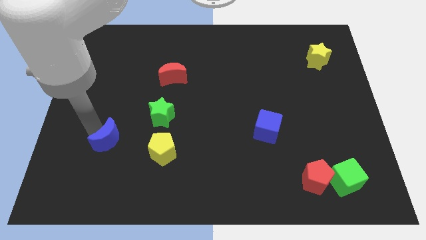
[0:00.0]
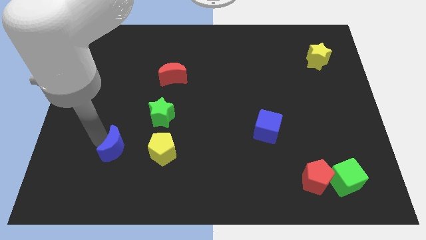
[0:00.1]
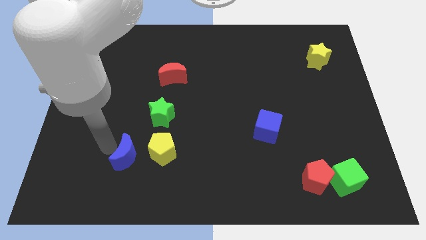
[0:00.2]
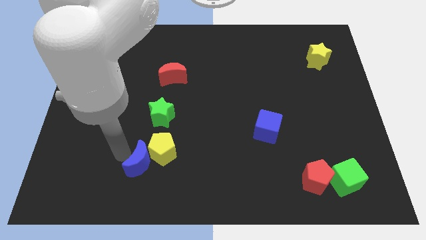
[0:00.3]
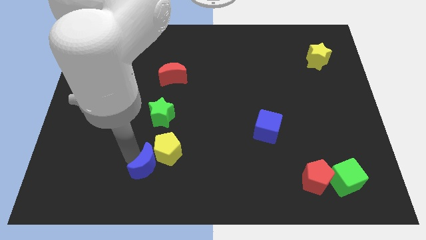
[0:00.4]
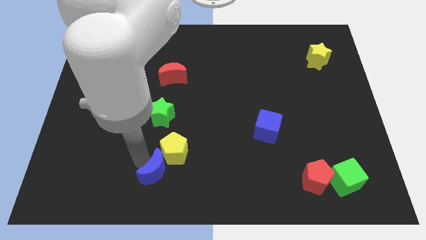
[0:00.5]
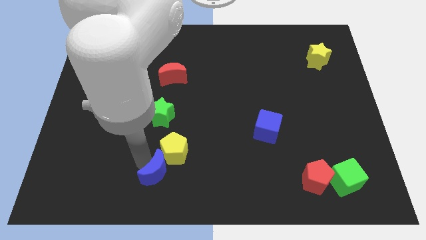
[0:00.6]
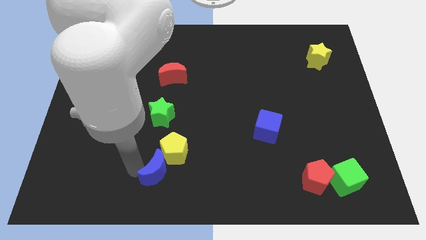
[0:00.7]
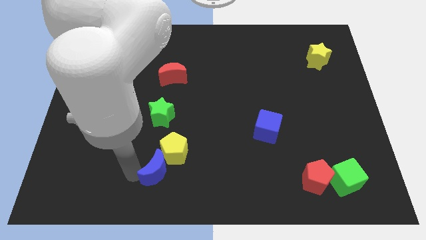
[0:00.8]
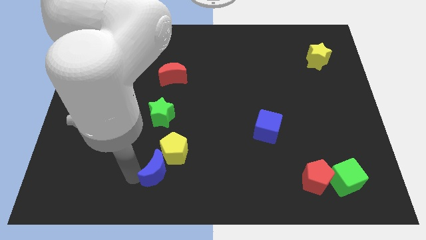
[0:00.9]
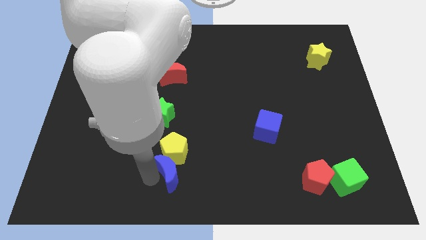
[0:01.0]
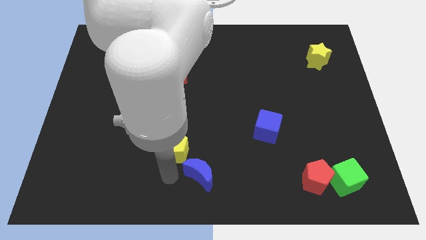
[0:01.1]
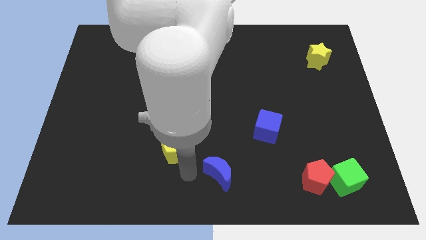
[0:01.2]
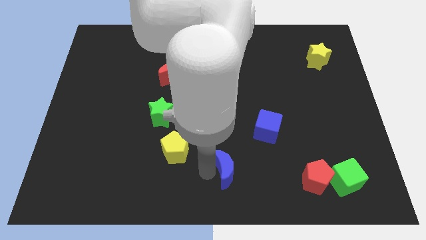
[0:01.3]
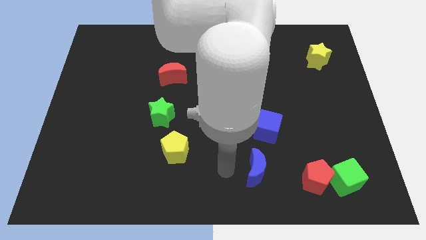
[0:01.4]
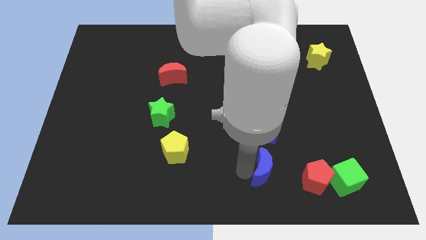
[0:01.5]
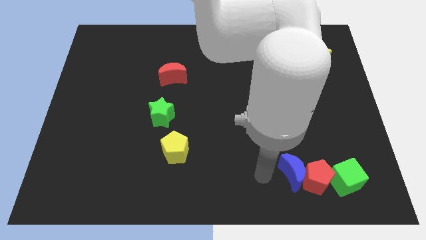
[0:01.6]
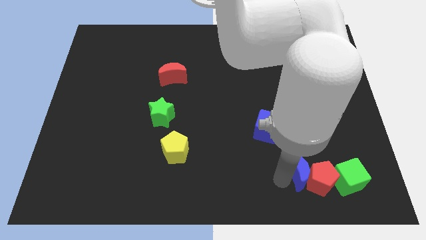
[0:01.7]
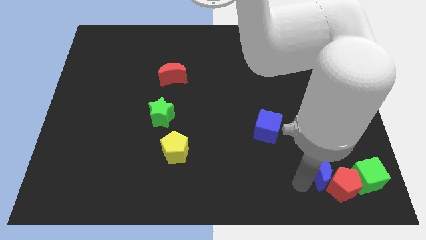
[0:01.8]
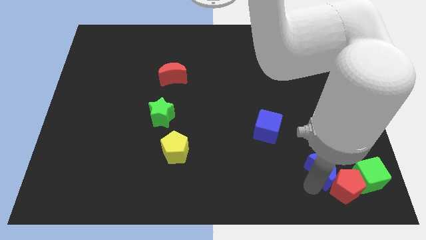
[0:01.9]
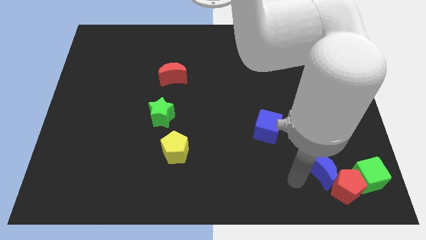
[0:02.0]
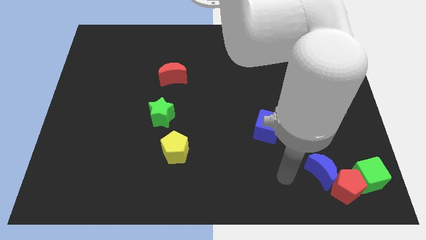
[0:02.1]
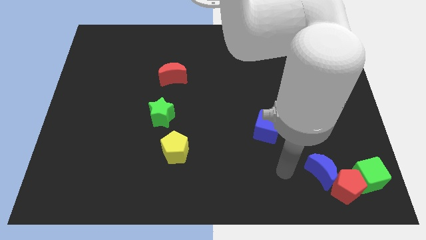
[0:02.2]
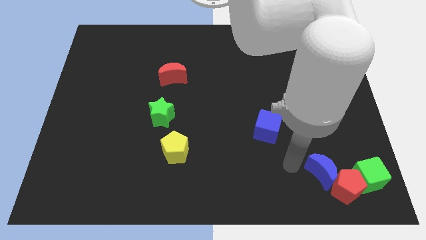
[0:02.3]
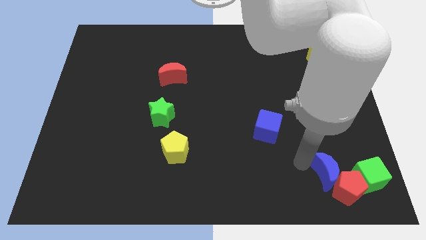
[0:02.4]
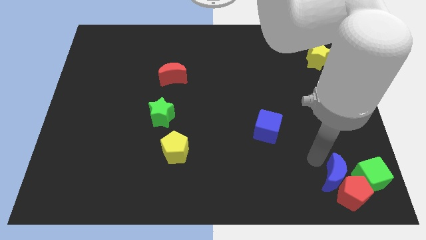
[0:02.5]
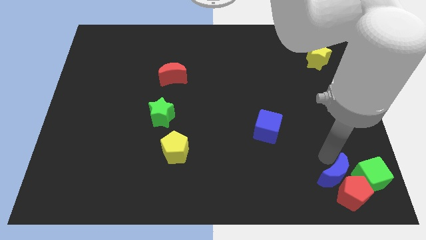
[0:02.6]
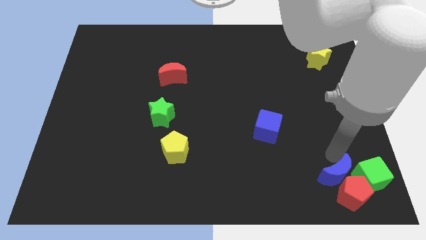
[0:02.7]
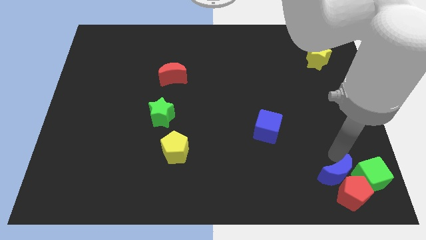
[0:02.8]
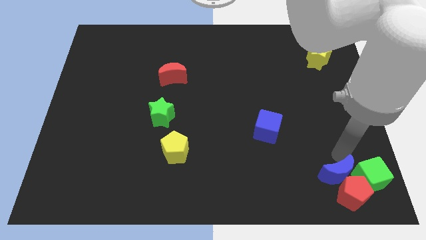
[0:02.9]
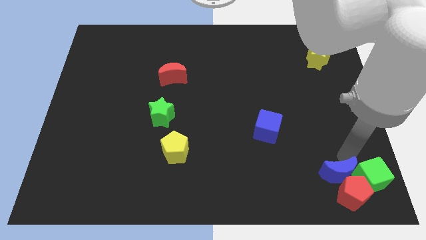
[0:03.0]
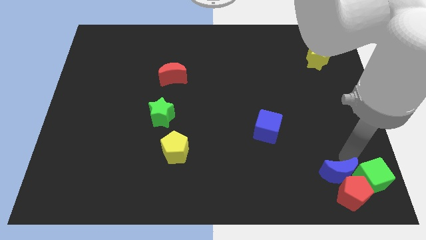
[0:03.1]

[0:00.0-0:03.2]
place blue moon above the red pentagon at the bottom right corner

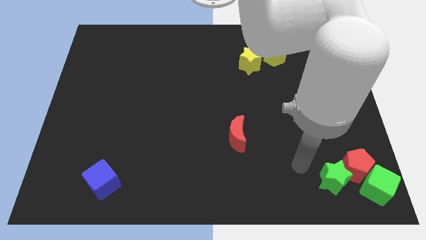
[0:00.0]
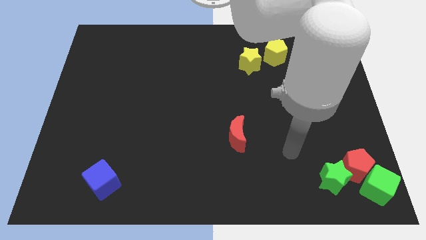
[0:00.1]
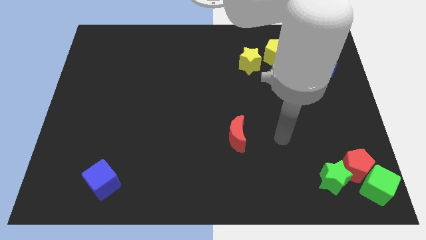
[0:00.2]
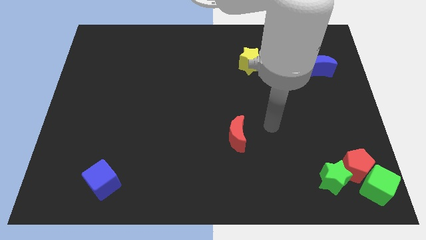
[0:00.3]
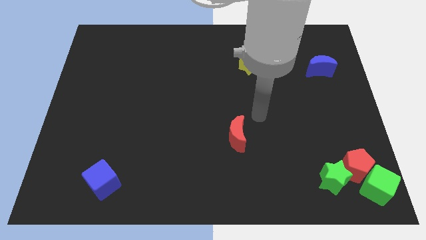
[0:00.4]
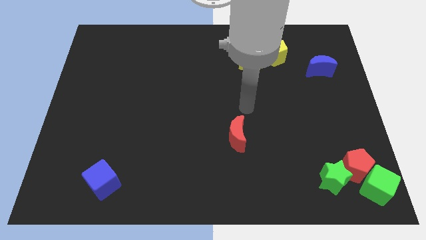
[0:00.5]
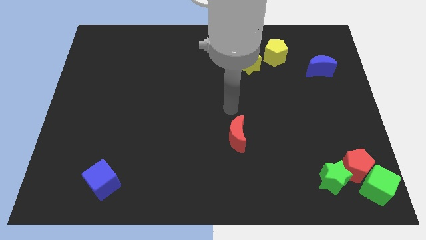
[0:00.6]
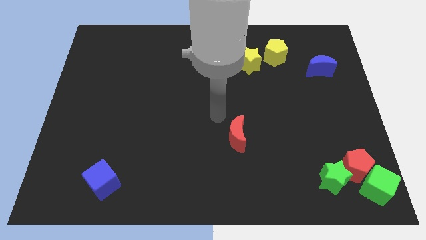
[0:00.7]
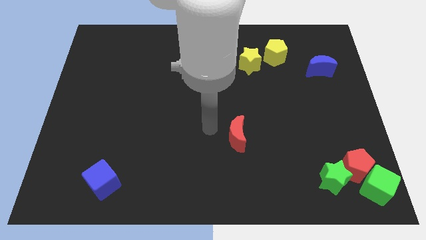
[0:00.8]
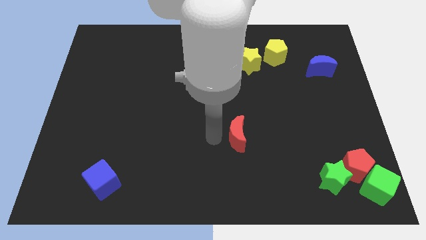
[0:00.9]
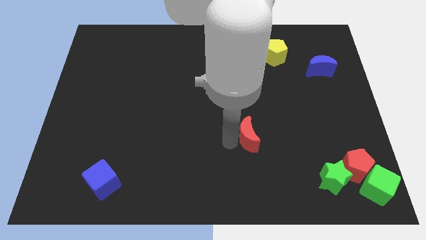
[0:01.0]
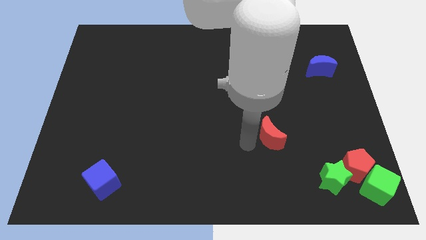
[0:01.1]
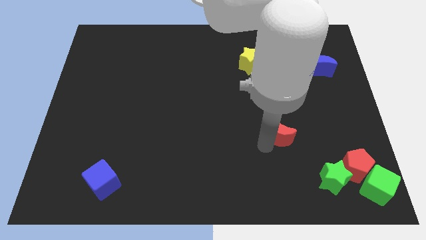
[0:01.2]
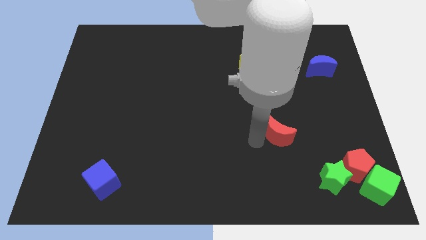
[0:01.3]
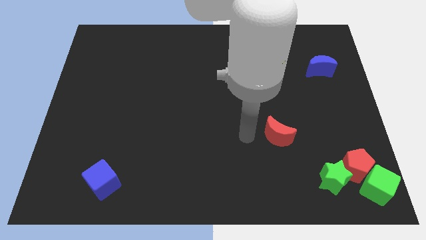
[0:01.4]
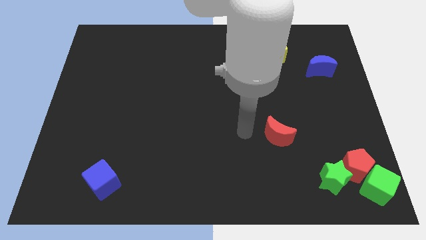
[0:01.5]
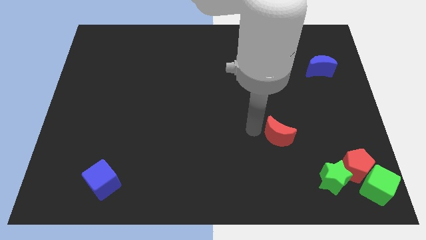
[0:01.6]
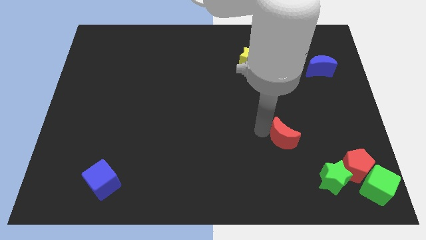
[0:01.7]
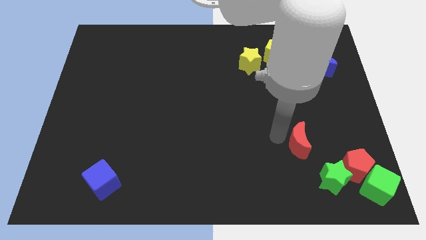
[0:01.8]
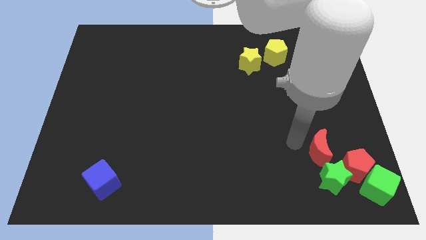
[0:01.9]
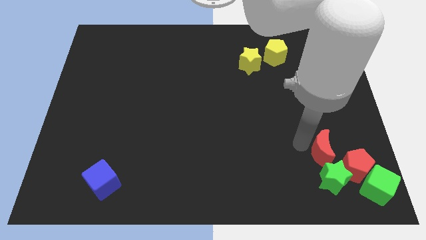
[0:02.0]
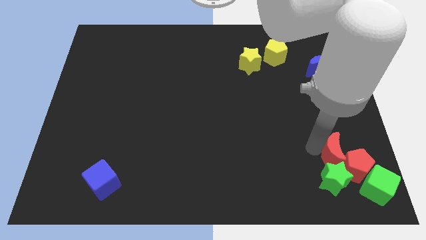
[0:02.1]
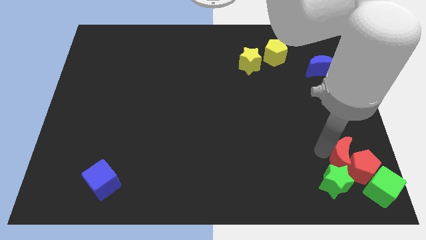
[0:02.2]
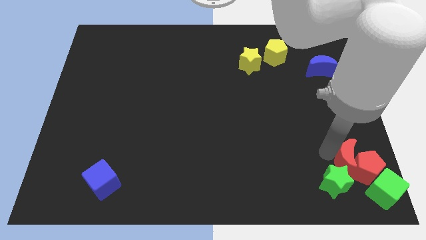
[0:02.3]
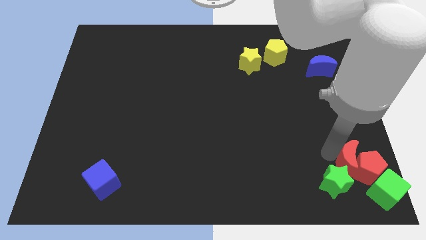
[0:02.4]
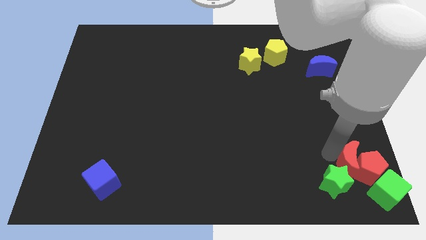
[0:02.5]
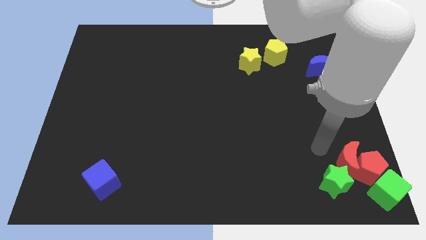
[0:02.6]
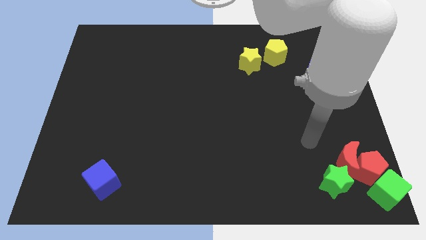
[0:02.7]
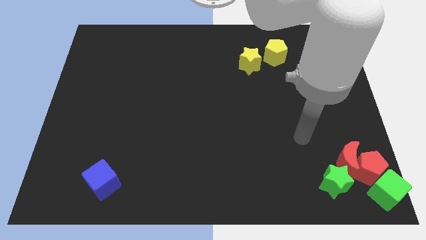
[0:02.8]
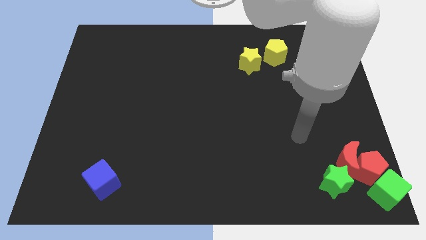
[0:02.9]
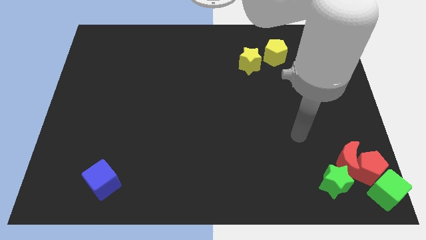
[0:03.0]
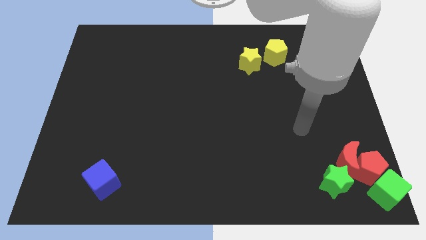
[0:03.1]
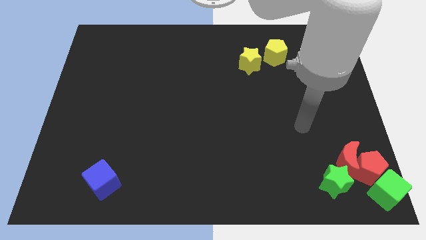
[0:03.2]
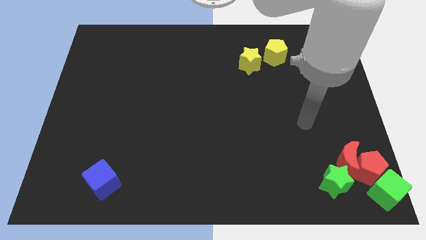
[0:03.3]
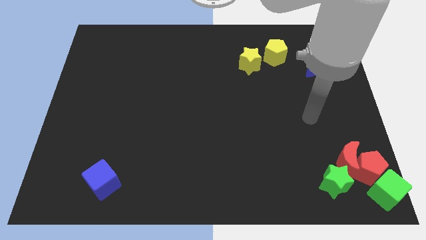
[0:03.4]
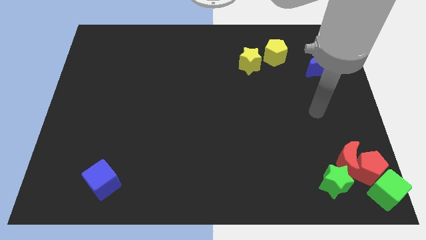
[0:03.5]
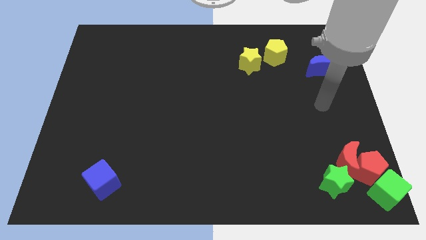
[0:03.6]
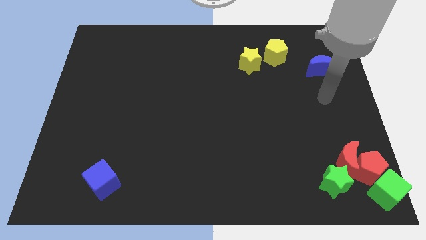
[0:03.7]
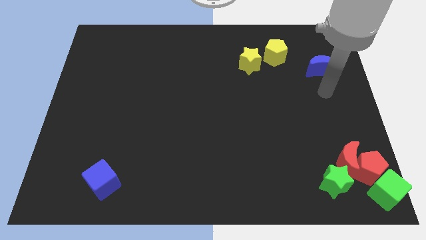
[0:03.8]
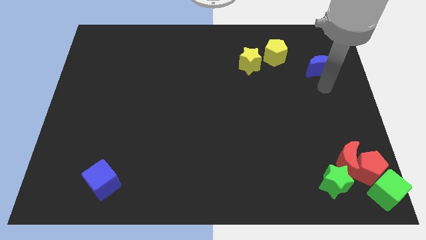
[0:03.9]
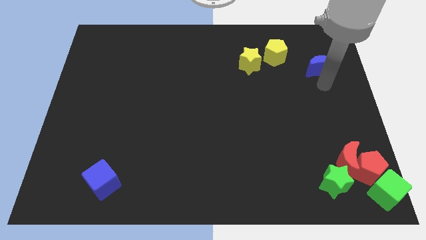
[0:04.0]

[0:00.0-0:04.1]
push the red crescent into red pentagon

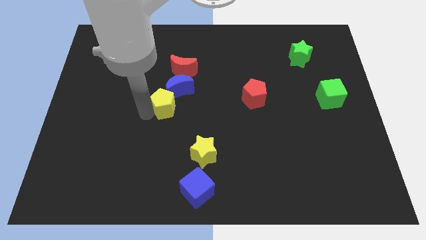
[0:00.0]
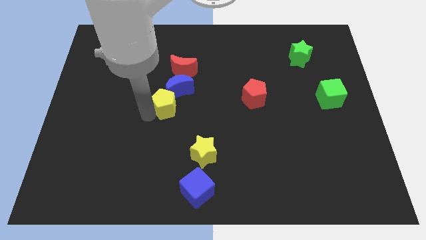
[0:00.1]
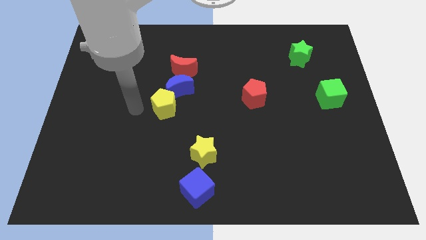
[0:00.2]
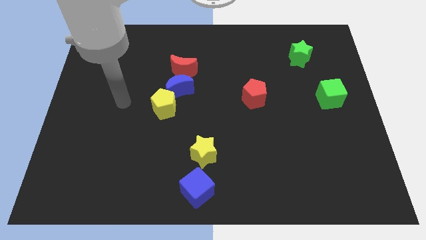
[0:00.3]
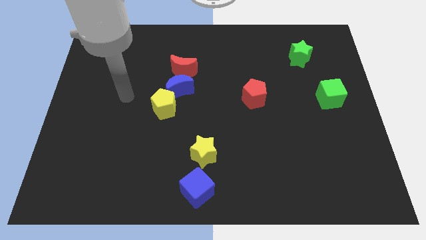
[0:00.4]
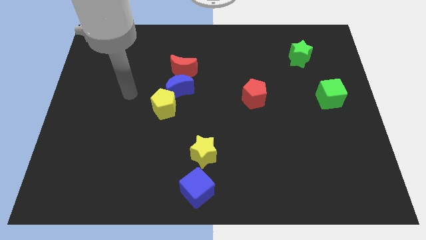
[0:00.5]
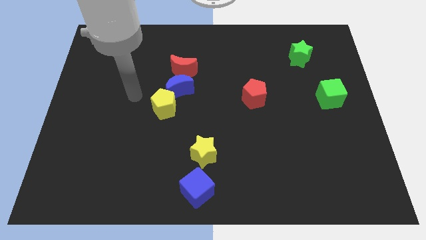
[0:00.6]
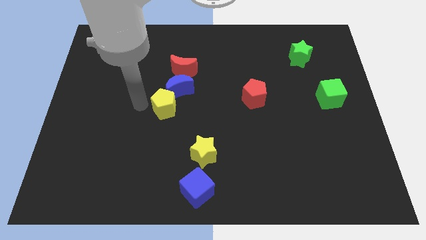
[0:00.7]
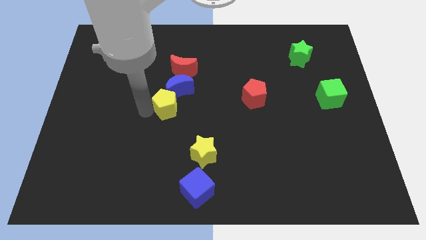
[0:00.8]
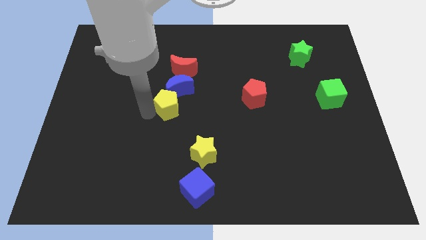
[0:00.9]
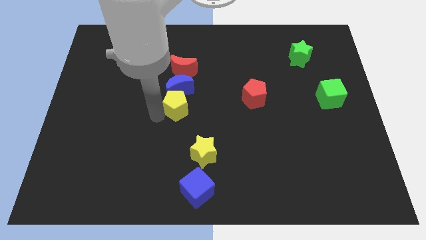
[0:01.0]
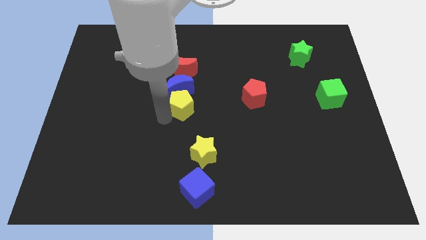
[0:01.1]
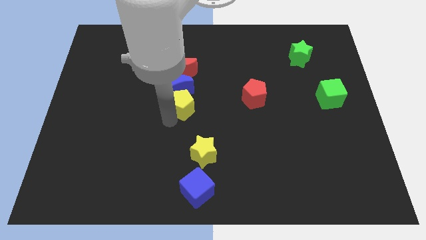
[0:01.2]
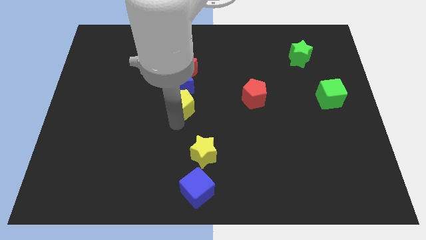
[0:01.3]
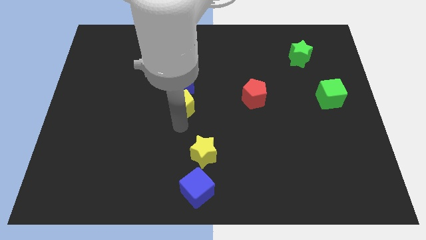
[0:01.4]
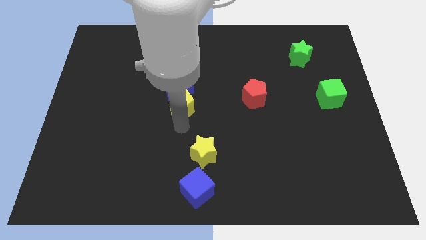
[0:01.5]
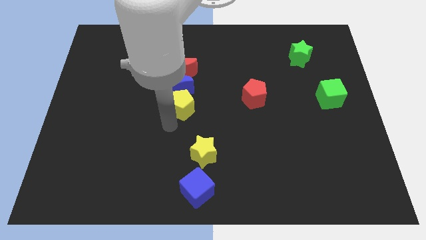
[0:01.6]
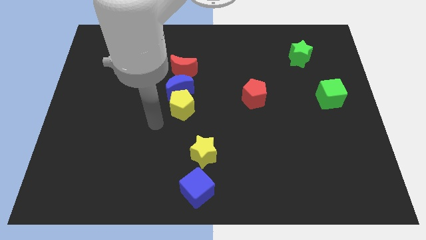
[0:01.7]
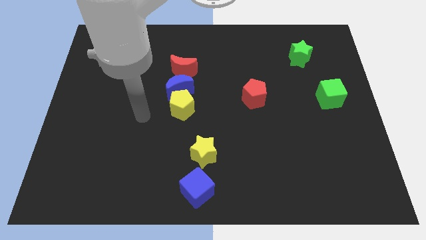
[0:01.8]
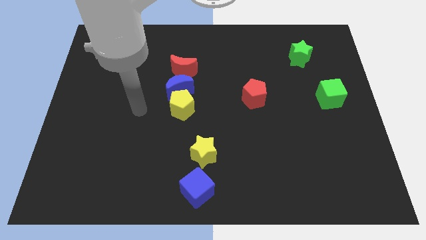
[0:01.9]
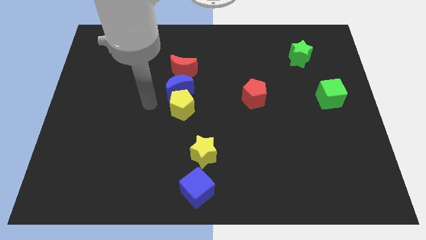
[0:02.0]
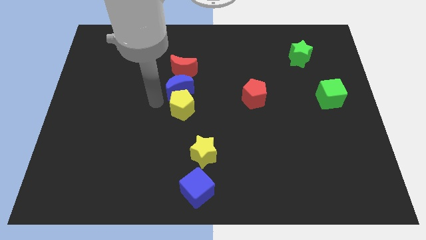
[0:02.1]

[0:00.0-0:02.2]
place the yellow pentagon below the blue moon
